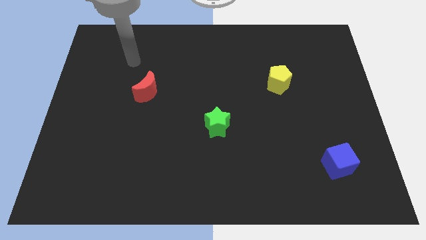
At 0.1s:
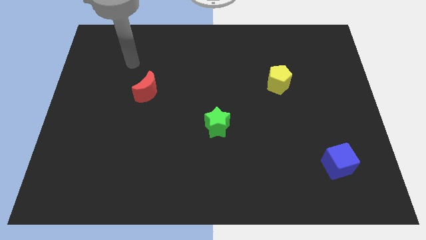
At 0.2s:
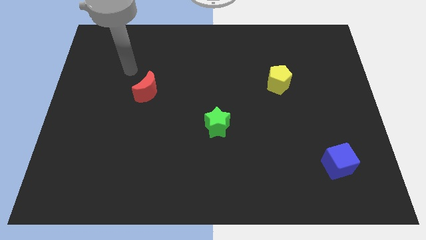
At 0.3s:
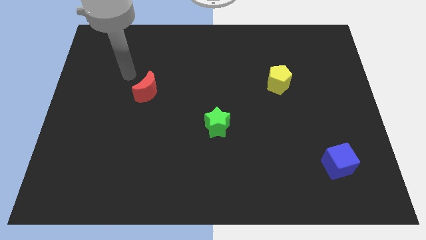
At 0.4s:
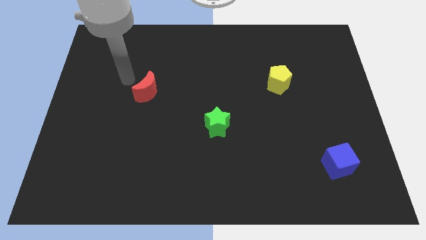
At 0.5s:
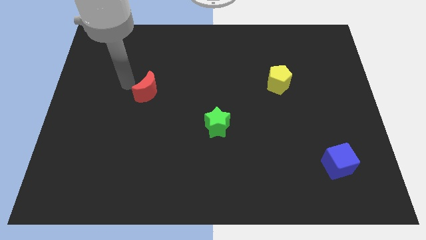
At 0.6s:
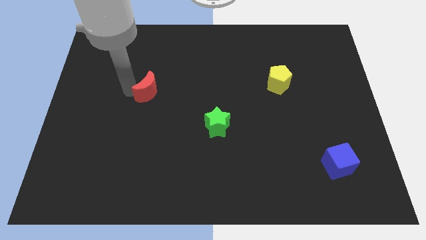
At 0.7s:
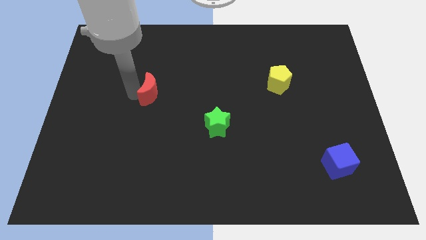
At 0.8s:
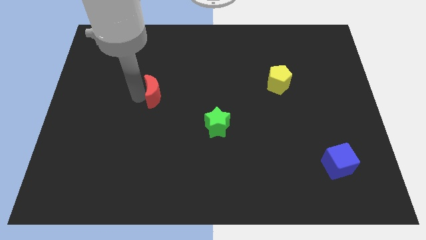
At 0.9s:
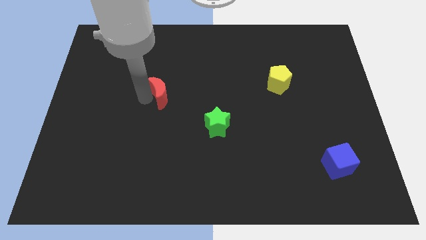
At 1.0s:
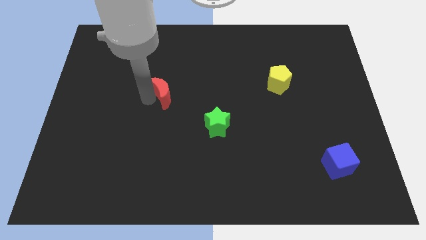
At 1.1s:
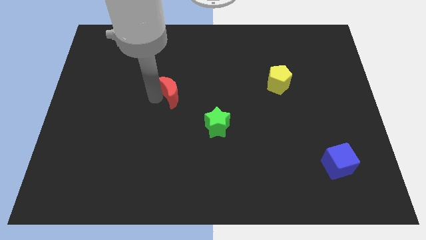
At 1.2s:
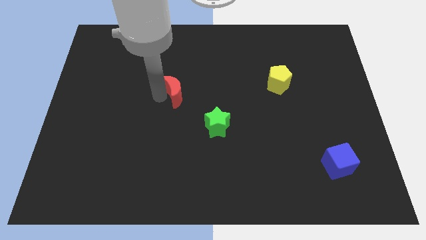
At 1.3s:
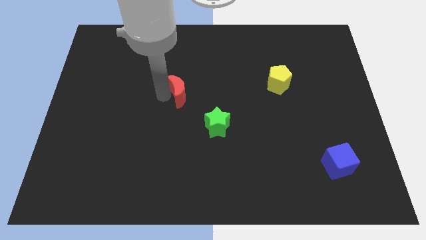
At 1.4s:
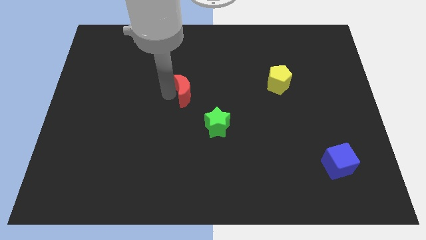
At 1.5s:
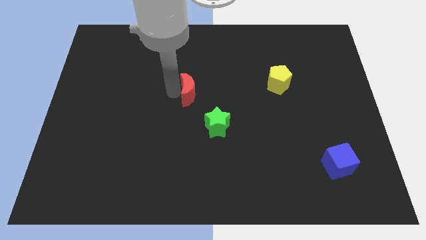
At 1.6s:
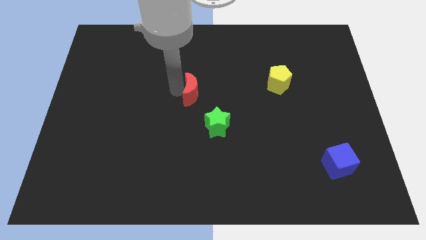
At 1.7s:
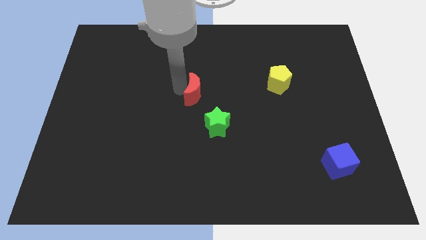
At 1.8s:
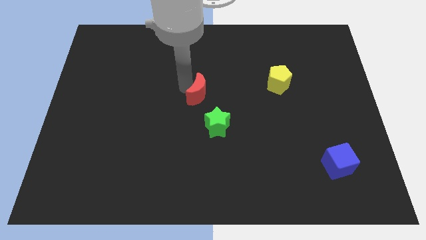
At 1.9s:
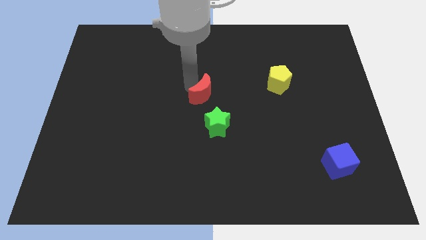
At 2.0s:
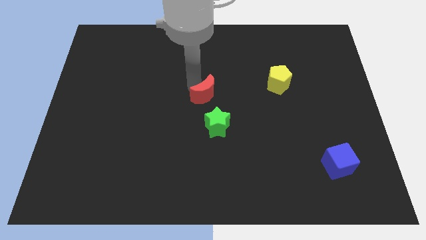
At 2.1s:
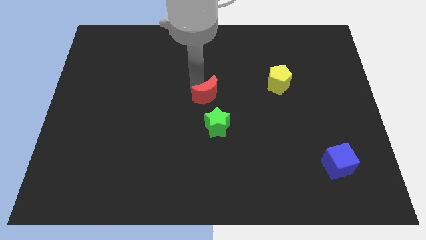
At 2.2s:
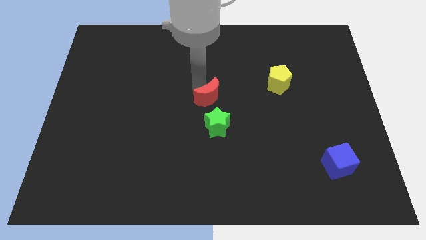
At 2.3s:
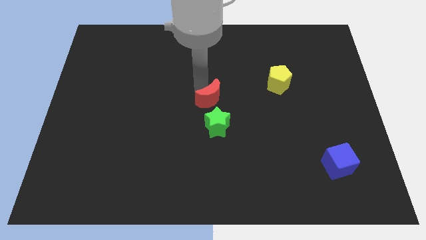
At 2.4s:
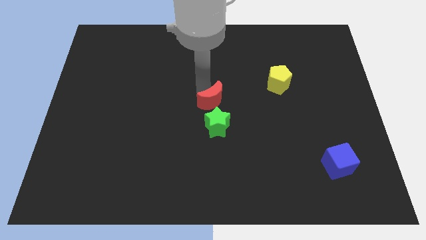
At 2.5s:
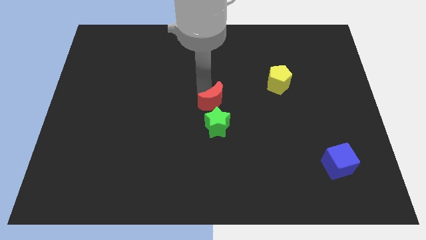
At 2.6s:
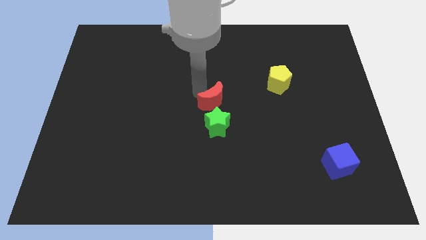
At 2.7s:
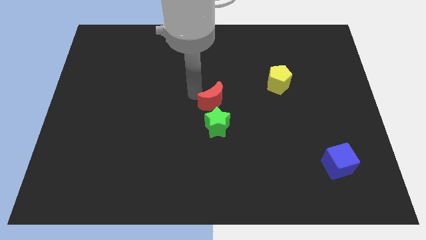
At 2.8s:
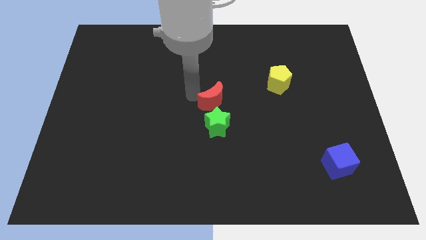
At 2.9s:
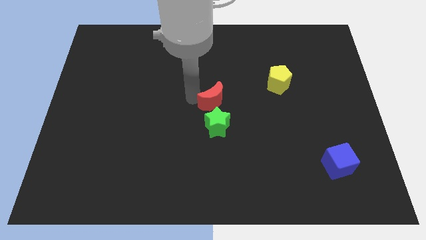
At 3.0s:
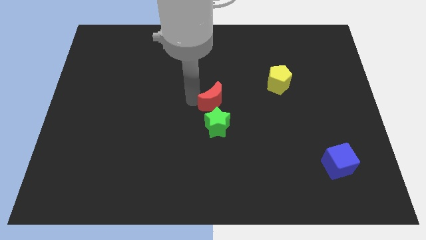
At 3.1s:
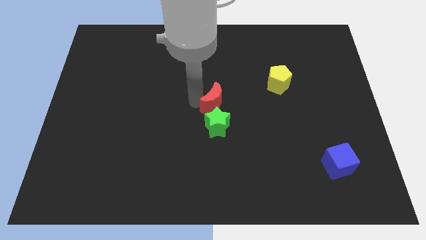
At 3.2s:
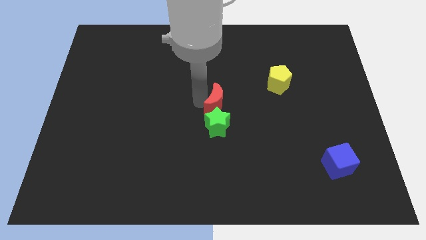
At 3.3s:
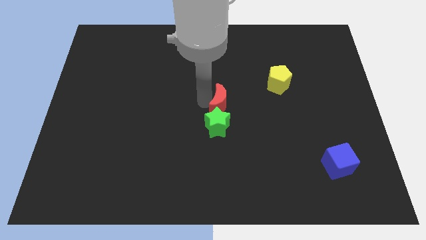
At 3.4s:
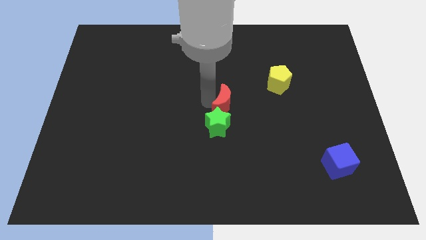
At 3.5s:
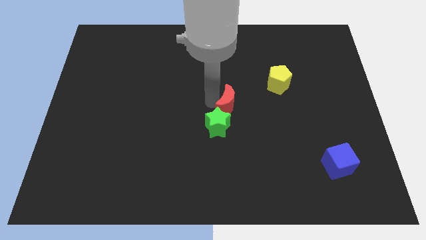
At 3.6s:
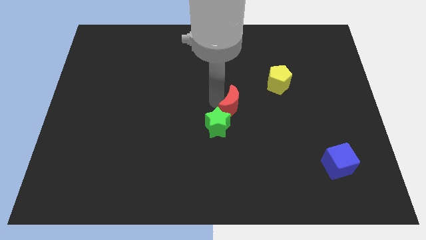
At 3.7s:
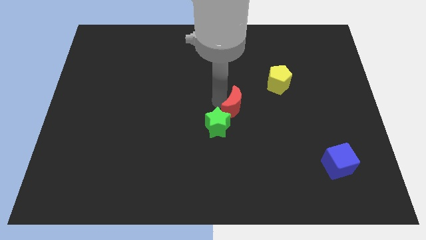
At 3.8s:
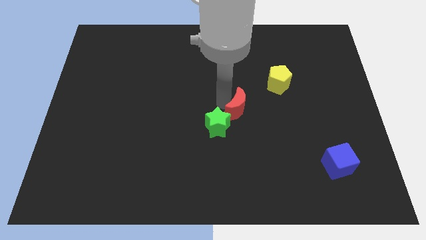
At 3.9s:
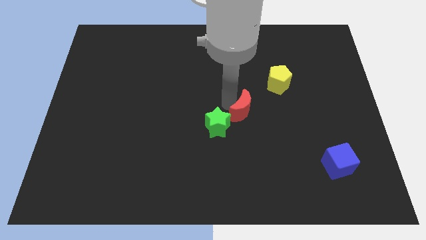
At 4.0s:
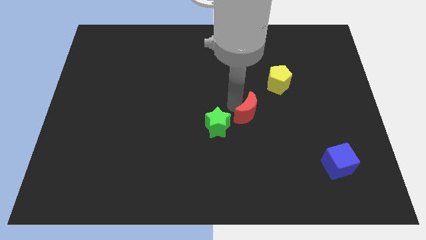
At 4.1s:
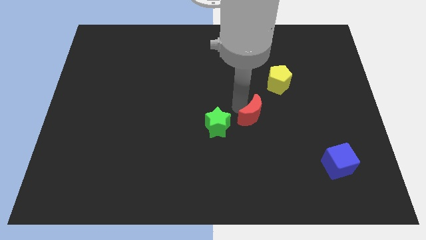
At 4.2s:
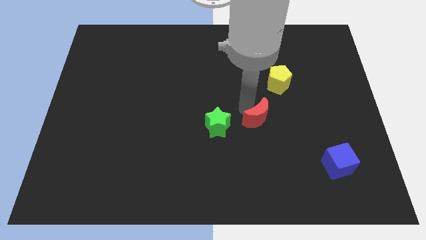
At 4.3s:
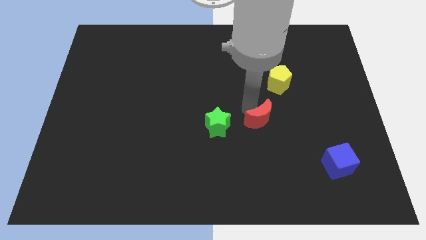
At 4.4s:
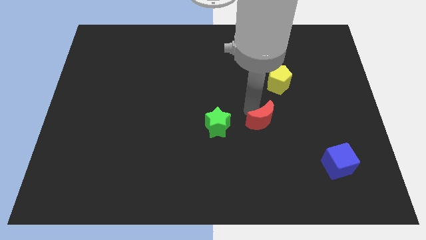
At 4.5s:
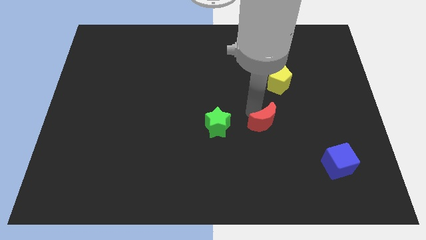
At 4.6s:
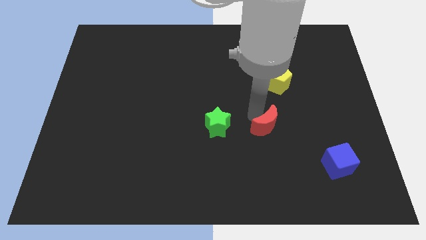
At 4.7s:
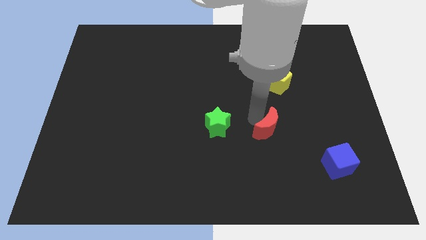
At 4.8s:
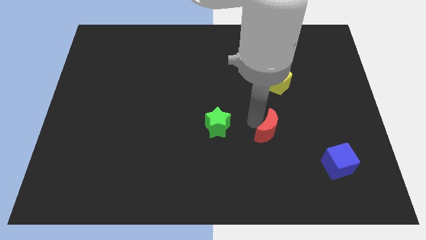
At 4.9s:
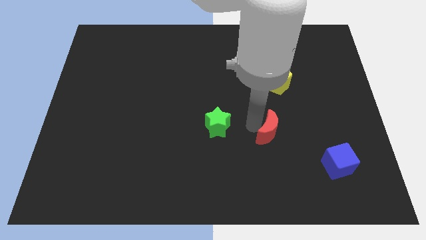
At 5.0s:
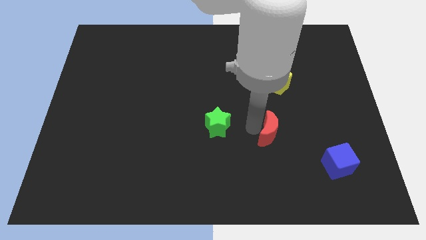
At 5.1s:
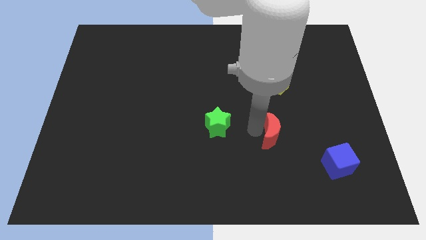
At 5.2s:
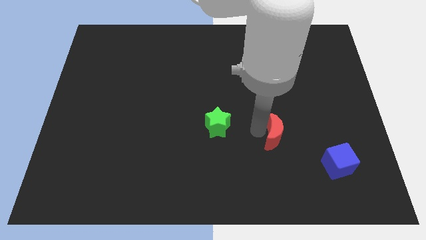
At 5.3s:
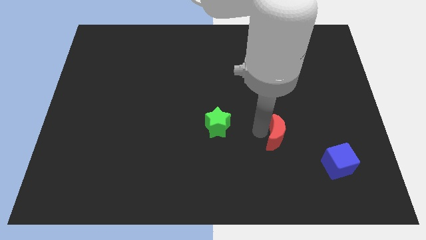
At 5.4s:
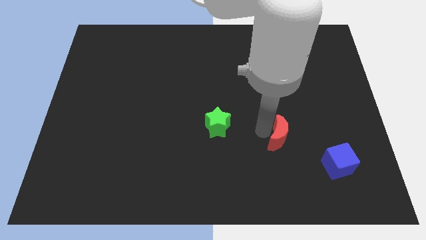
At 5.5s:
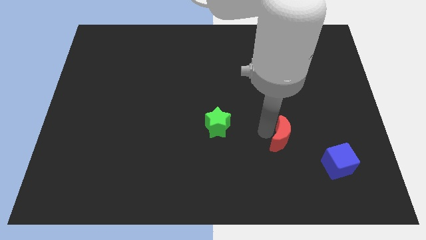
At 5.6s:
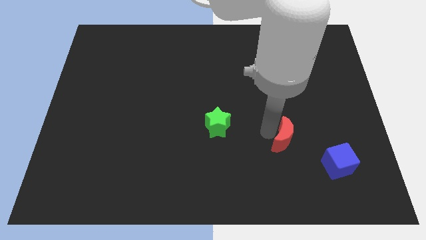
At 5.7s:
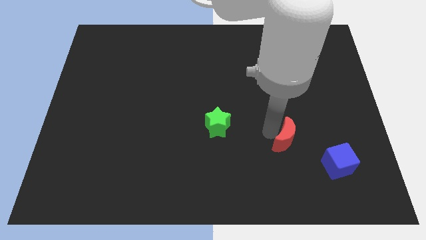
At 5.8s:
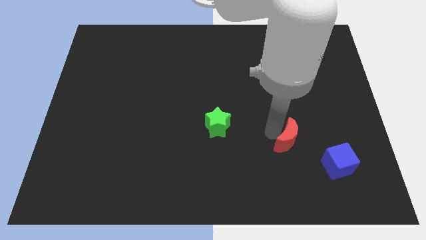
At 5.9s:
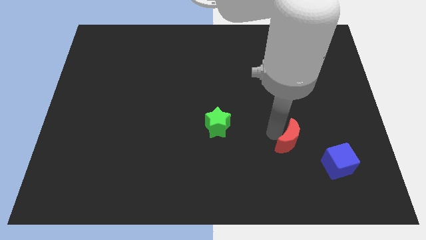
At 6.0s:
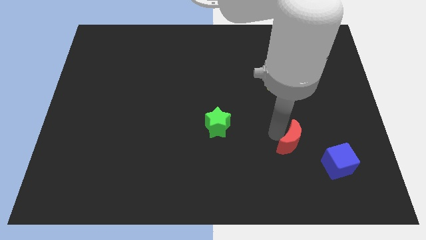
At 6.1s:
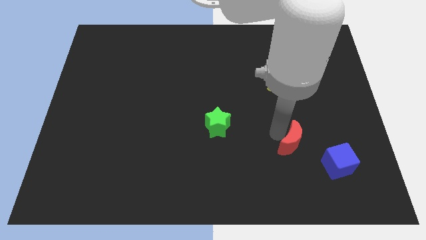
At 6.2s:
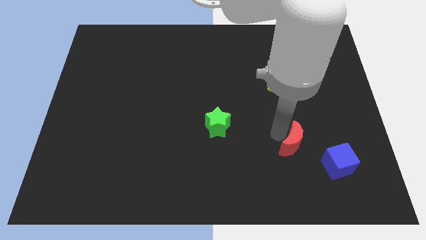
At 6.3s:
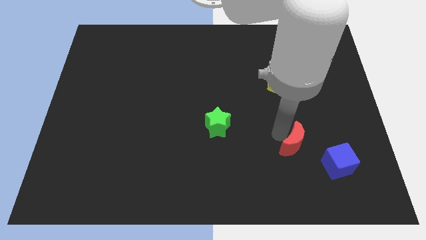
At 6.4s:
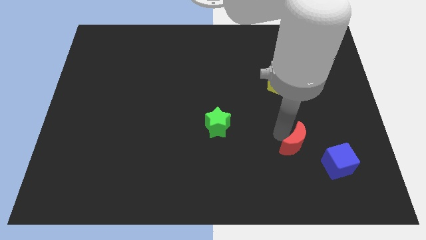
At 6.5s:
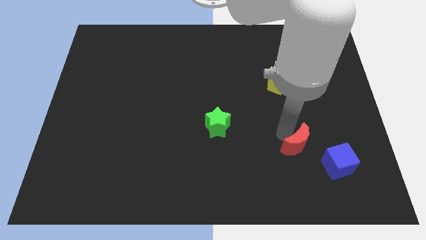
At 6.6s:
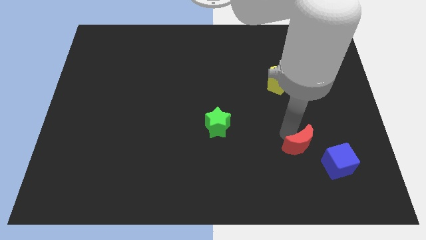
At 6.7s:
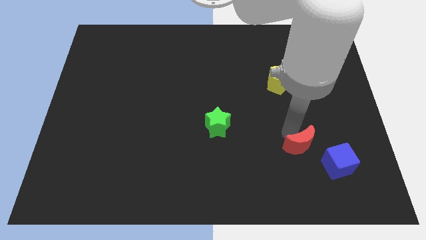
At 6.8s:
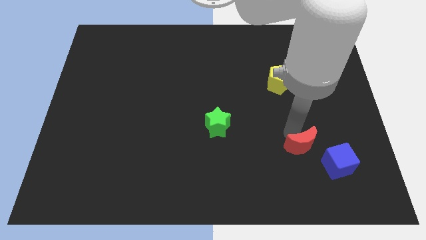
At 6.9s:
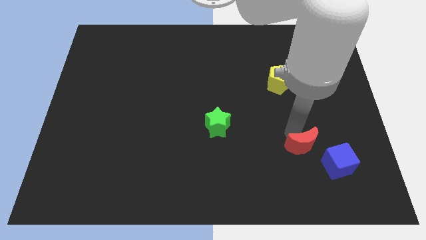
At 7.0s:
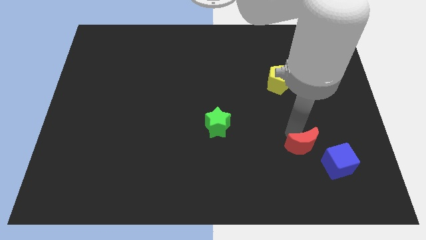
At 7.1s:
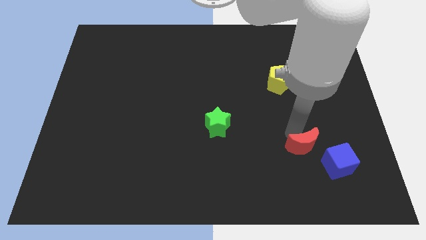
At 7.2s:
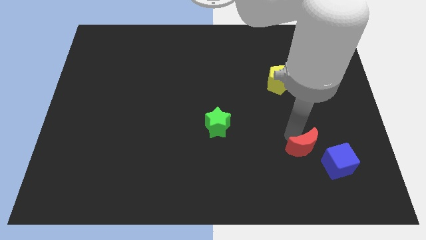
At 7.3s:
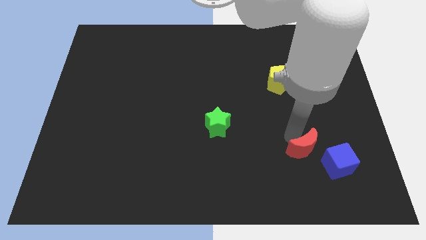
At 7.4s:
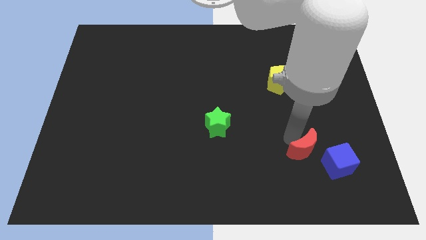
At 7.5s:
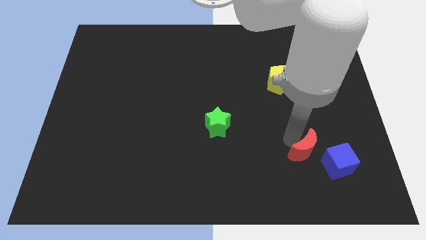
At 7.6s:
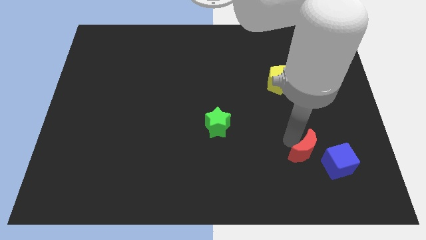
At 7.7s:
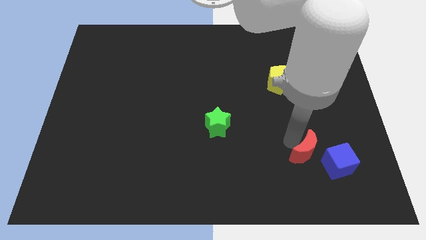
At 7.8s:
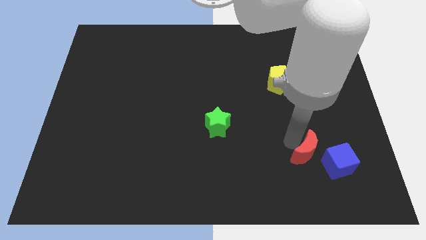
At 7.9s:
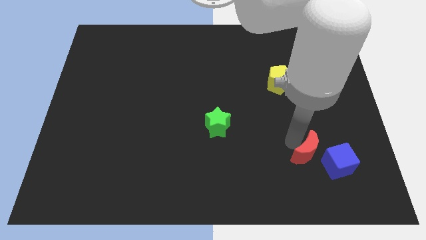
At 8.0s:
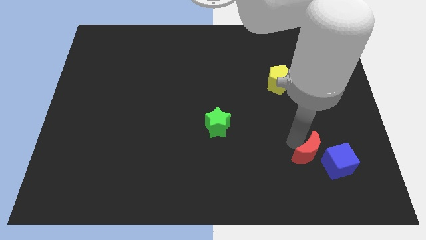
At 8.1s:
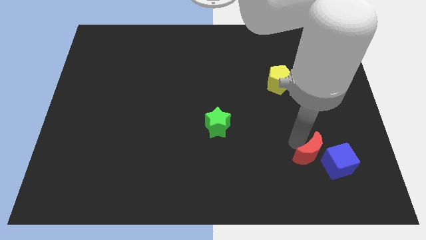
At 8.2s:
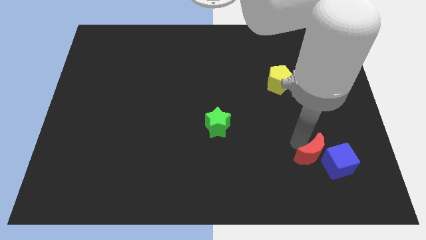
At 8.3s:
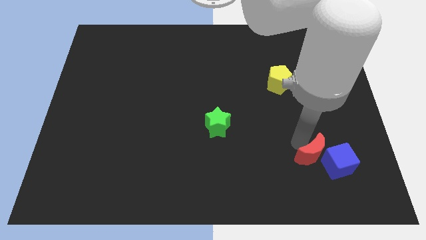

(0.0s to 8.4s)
move the red block close to the blue cube

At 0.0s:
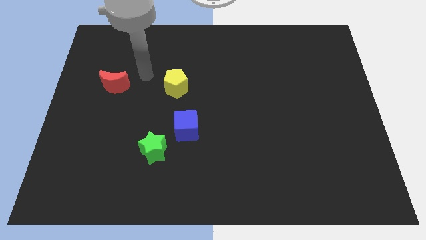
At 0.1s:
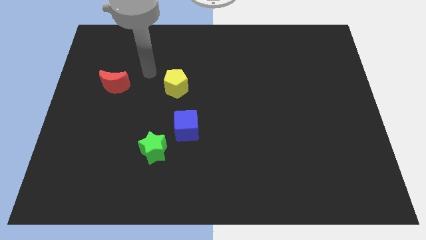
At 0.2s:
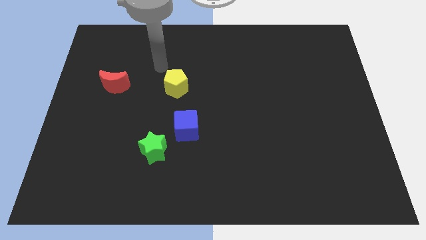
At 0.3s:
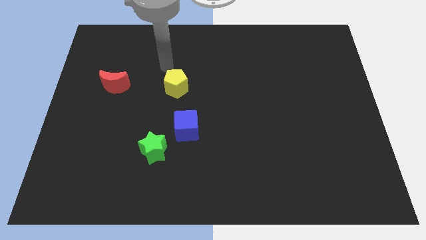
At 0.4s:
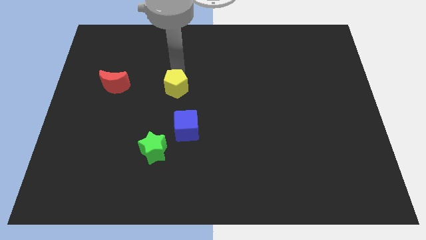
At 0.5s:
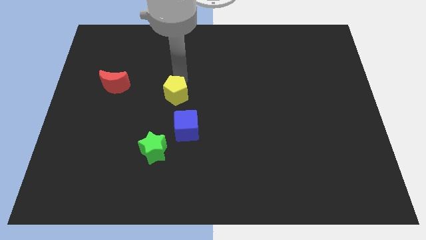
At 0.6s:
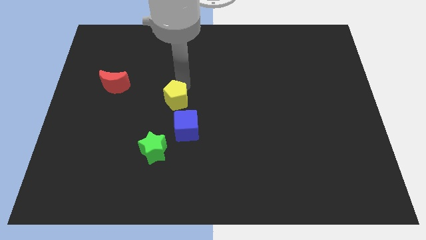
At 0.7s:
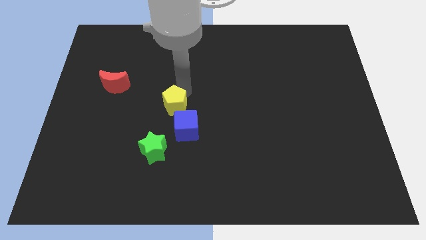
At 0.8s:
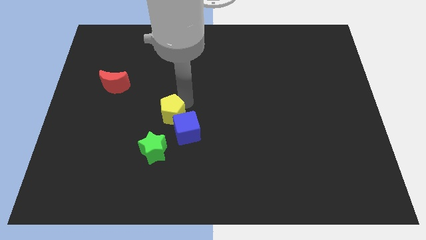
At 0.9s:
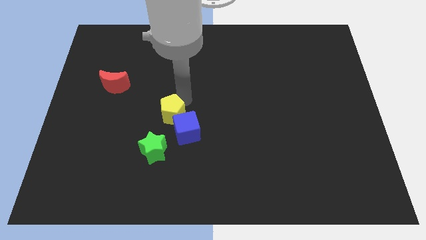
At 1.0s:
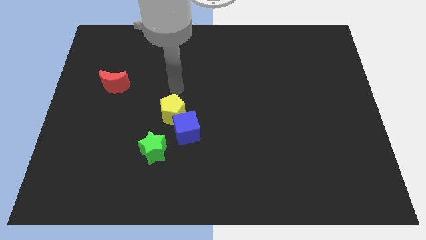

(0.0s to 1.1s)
push the pentagon close to the blue block
